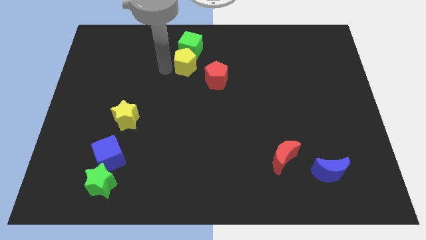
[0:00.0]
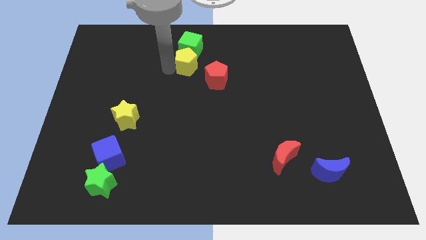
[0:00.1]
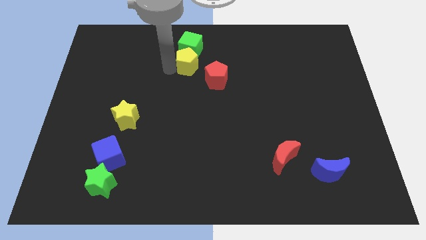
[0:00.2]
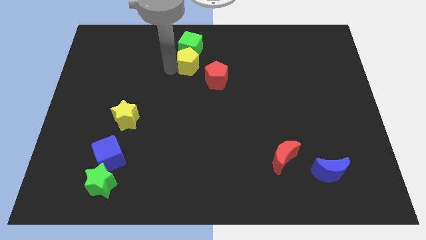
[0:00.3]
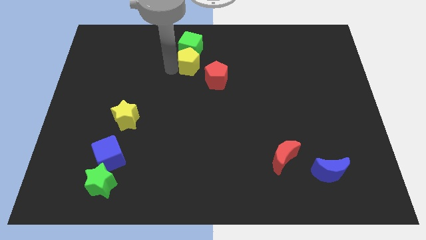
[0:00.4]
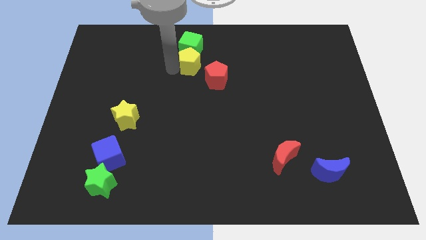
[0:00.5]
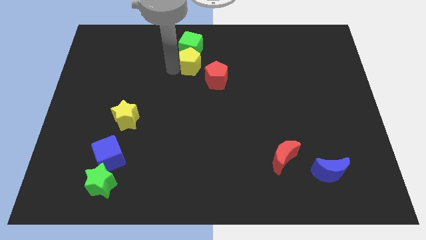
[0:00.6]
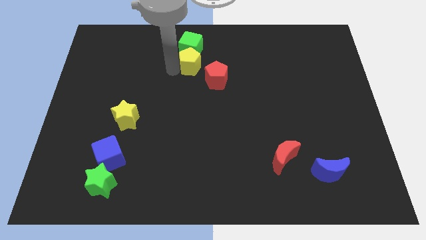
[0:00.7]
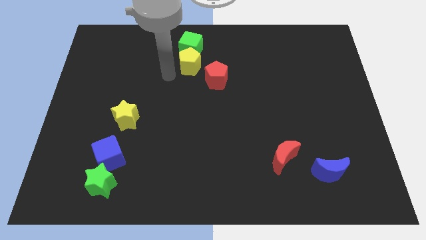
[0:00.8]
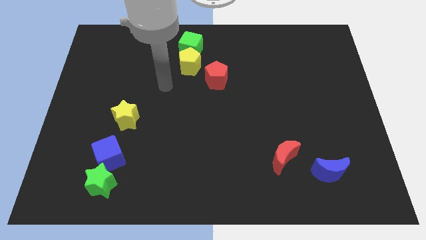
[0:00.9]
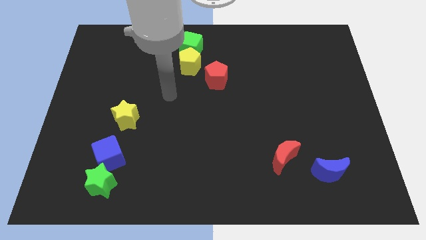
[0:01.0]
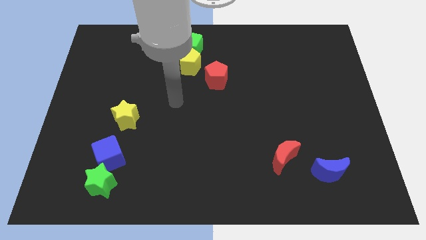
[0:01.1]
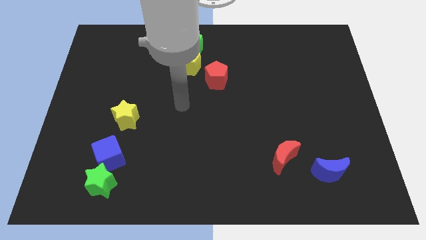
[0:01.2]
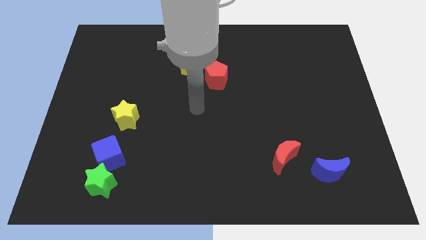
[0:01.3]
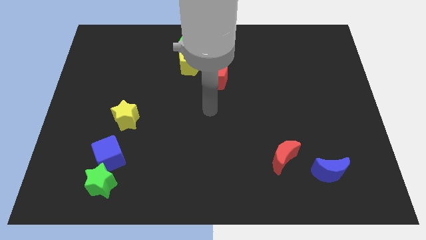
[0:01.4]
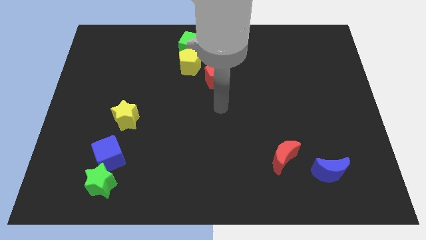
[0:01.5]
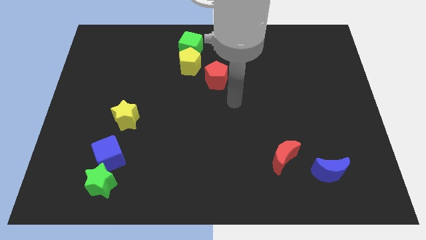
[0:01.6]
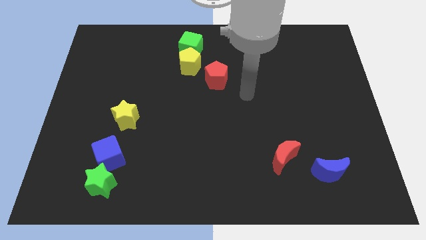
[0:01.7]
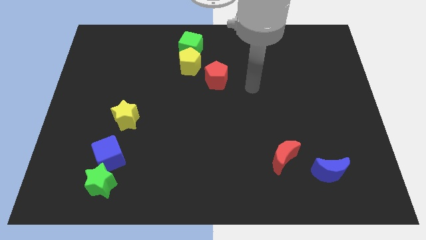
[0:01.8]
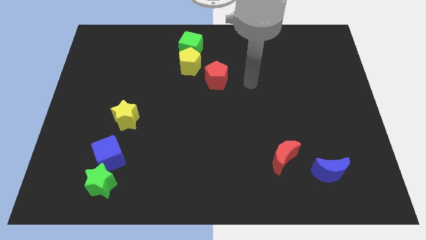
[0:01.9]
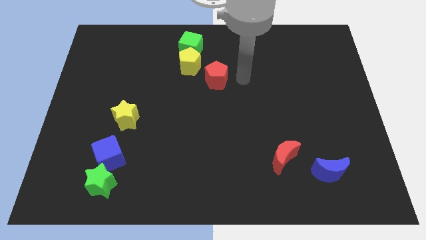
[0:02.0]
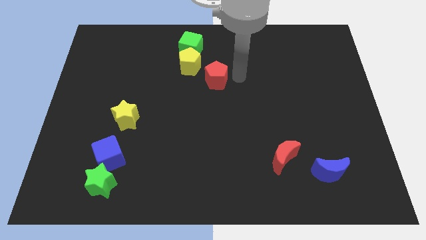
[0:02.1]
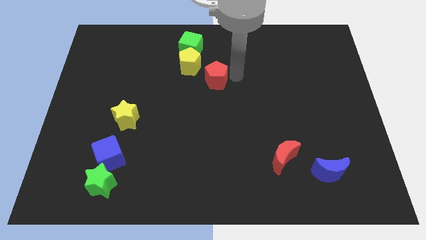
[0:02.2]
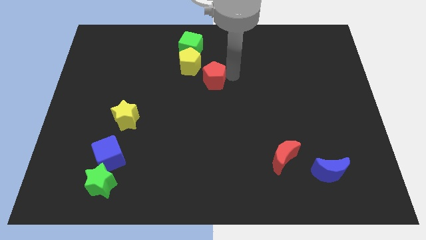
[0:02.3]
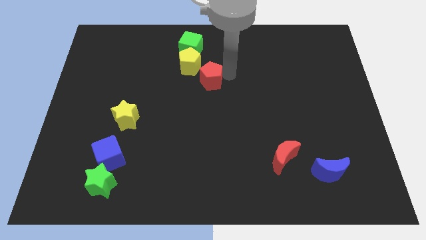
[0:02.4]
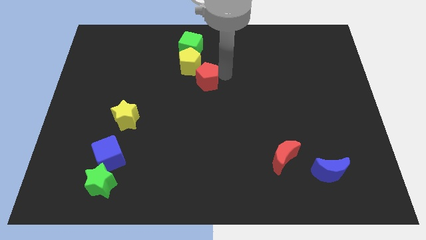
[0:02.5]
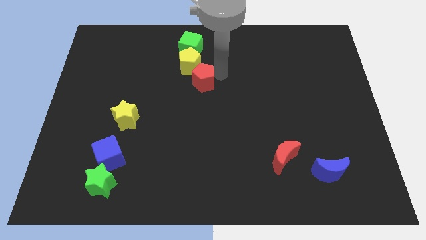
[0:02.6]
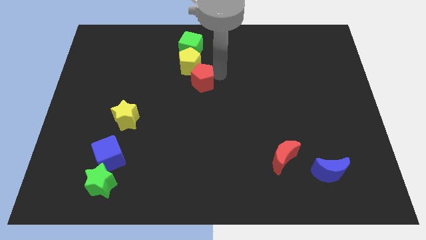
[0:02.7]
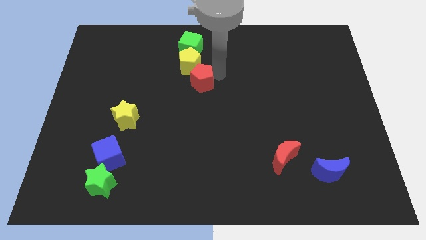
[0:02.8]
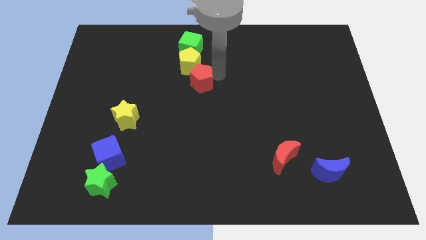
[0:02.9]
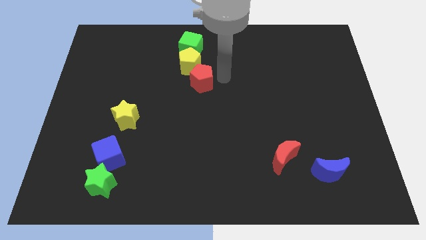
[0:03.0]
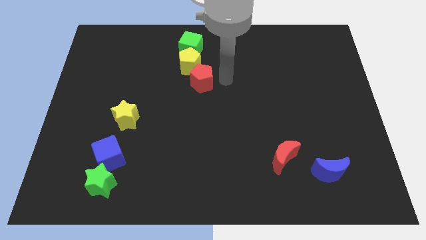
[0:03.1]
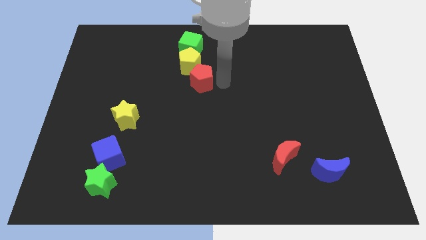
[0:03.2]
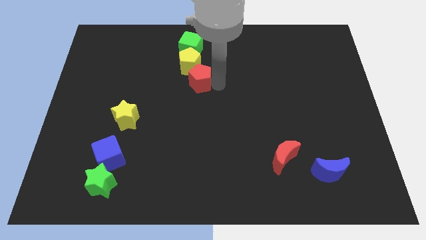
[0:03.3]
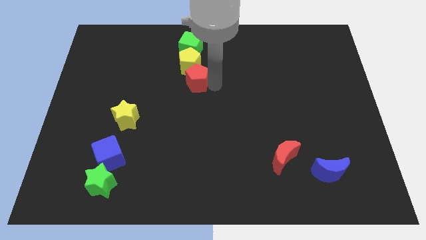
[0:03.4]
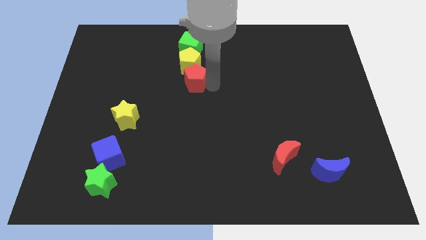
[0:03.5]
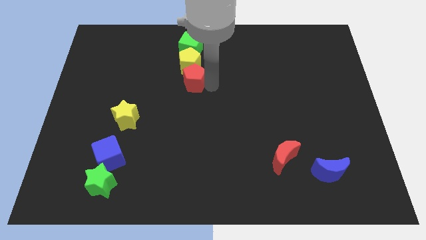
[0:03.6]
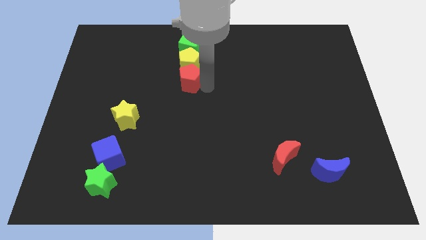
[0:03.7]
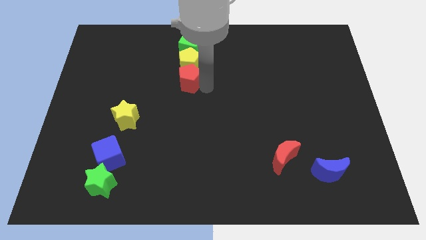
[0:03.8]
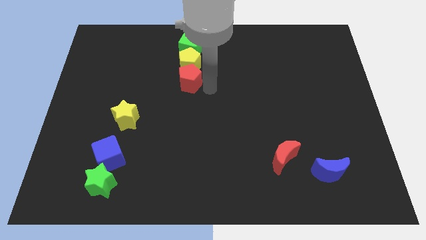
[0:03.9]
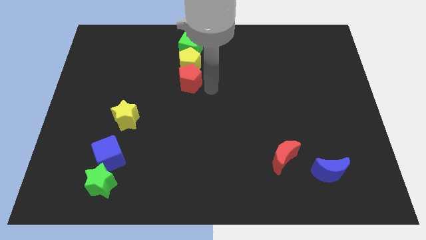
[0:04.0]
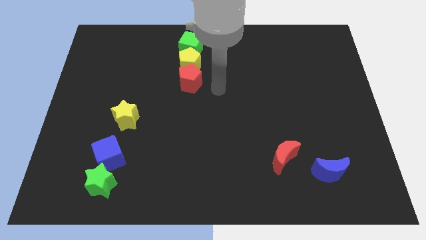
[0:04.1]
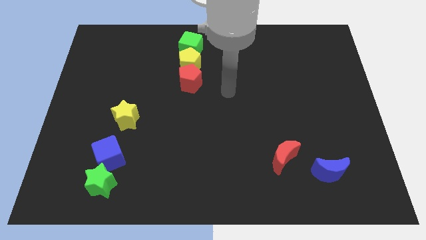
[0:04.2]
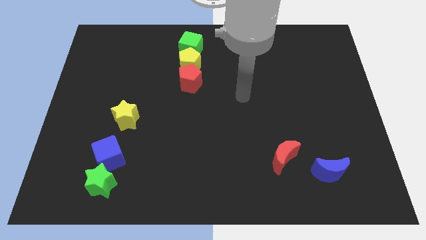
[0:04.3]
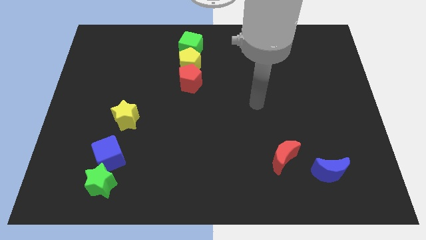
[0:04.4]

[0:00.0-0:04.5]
move the red pentagon down to the yellow pentagon

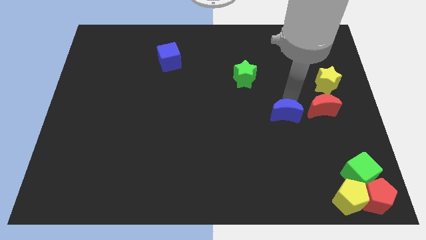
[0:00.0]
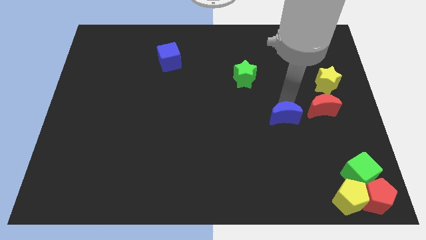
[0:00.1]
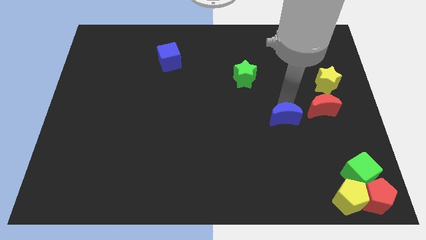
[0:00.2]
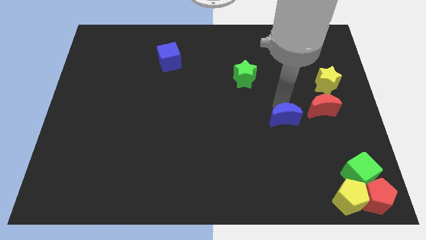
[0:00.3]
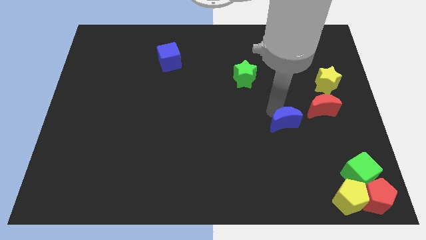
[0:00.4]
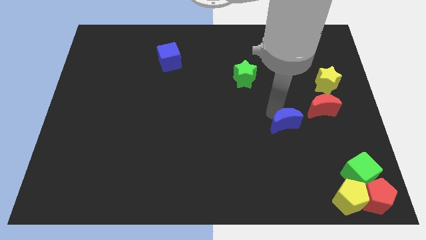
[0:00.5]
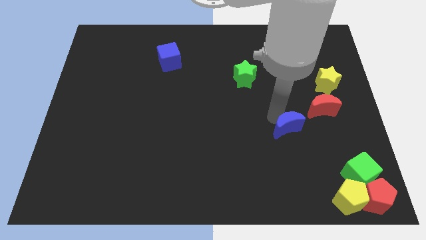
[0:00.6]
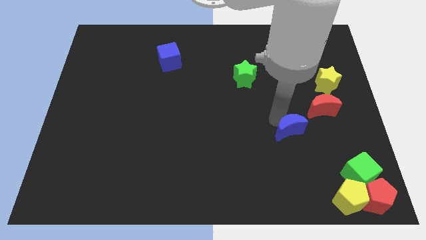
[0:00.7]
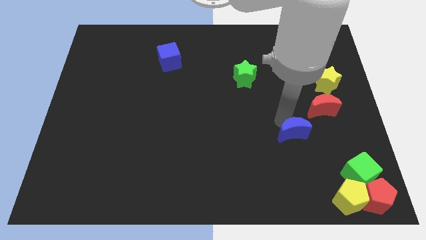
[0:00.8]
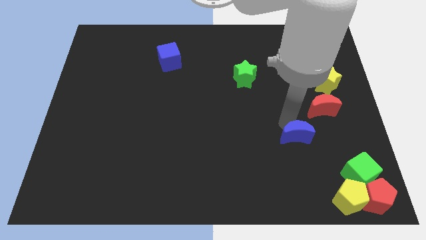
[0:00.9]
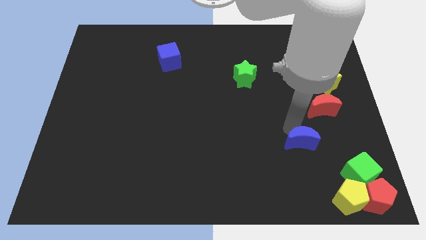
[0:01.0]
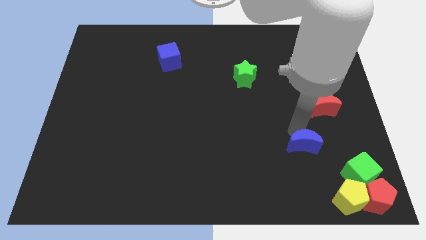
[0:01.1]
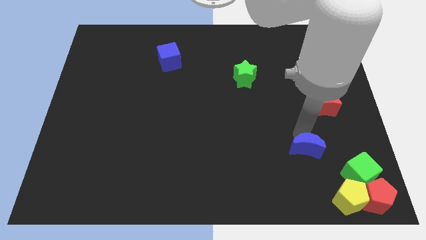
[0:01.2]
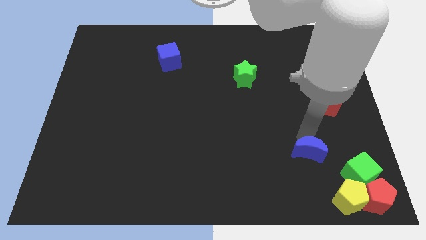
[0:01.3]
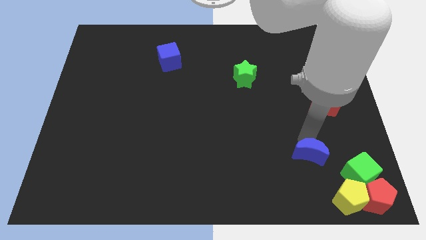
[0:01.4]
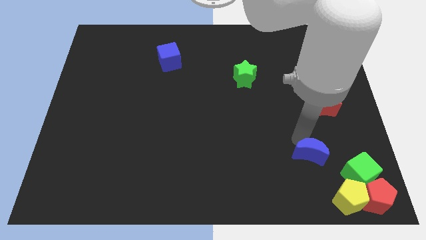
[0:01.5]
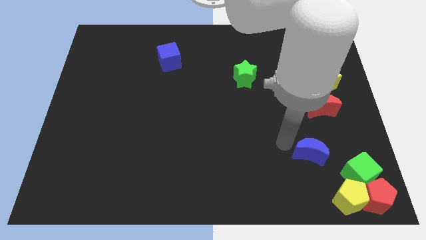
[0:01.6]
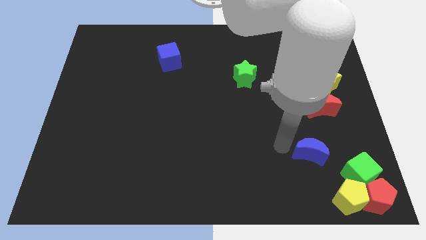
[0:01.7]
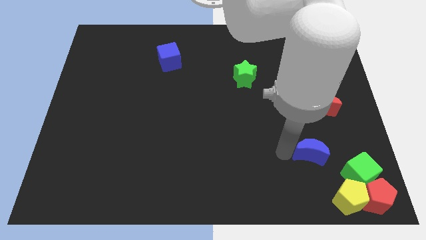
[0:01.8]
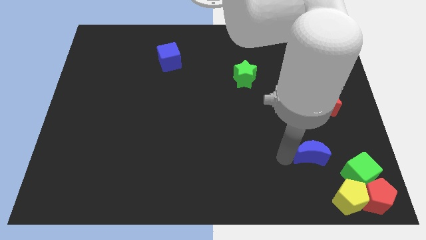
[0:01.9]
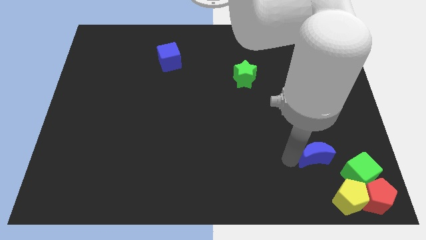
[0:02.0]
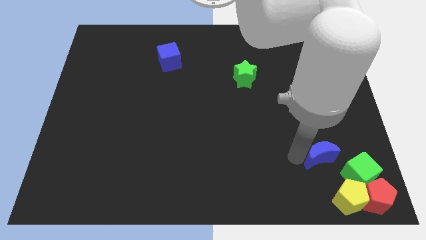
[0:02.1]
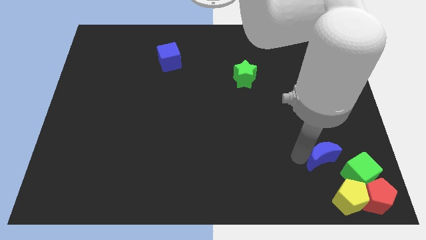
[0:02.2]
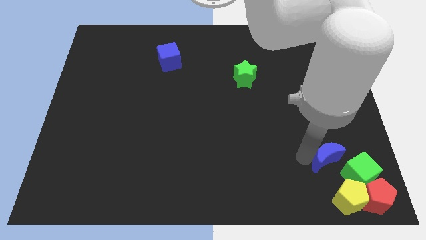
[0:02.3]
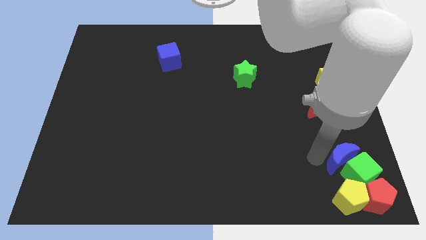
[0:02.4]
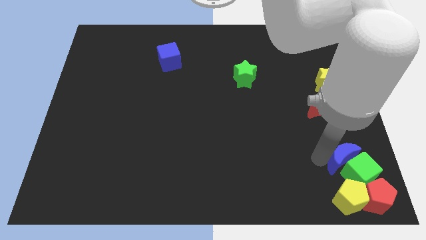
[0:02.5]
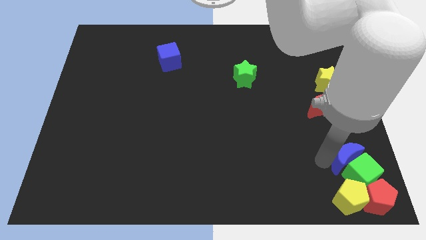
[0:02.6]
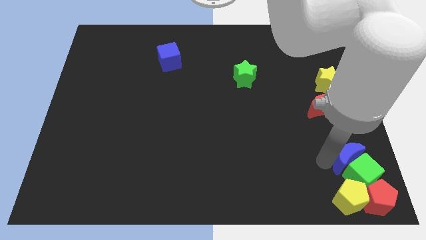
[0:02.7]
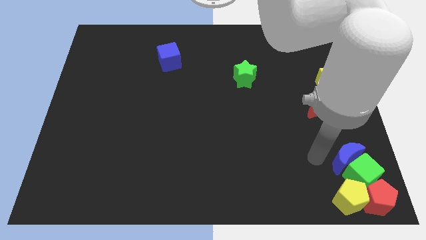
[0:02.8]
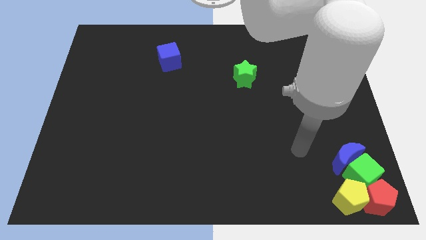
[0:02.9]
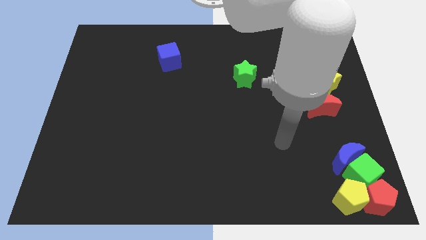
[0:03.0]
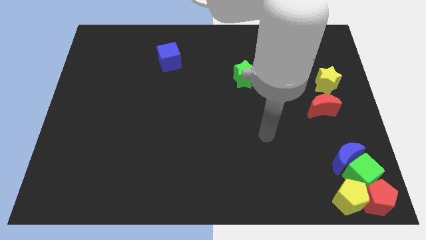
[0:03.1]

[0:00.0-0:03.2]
push blue crescent into the group of blocks

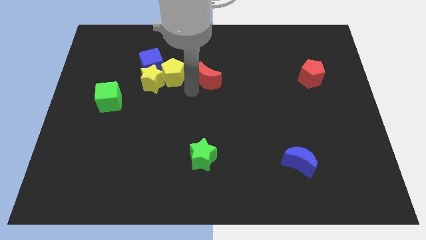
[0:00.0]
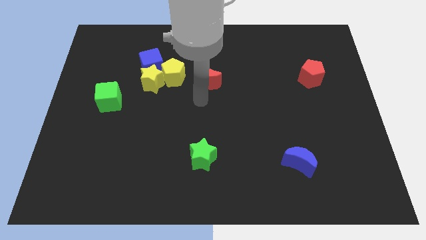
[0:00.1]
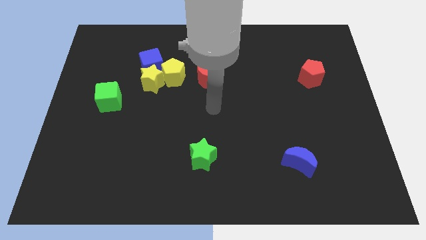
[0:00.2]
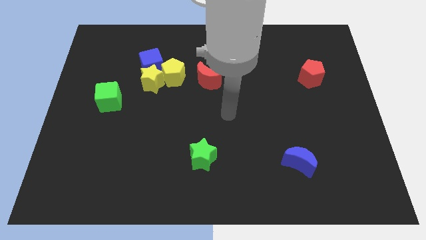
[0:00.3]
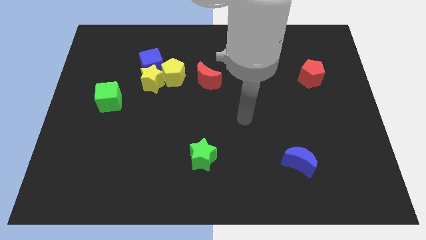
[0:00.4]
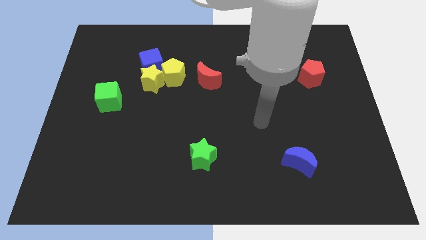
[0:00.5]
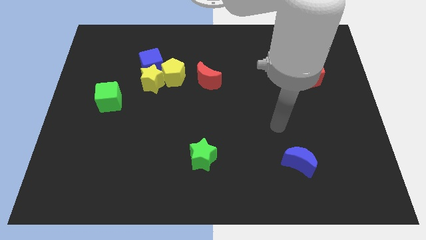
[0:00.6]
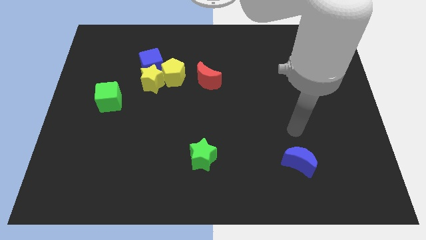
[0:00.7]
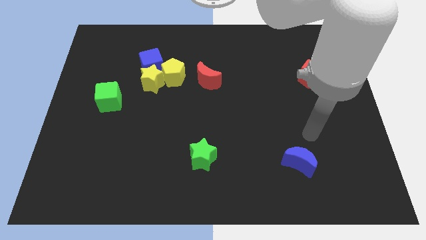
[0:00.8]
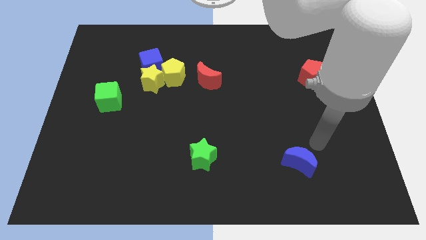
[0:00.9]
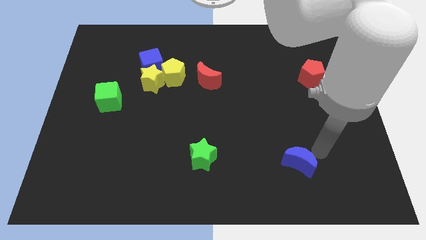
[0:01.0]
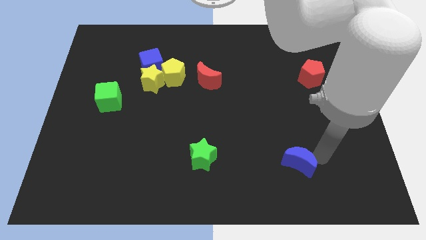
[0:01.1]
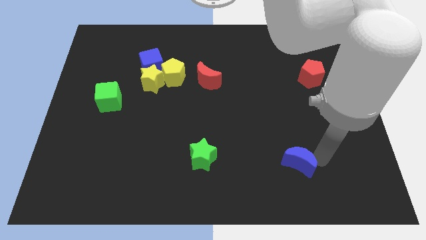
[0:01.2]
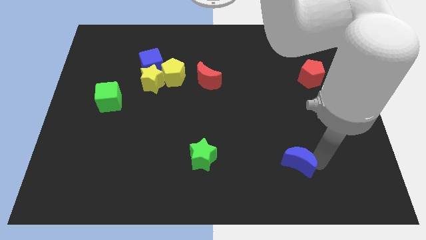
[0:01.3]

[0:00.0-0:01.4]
move the arm into the blue crescent
